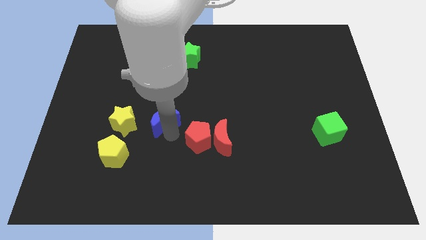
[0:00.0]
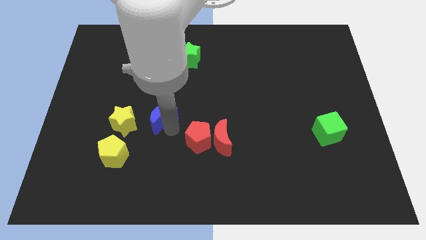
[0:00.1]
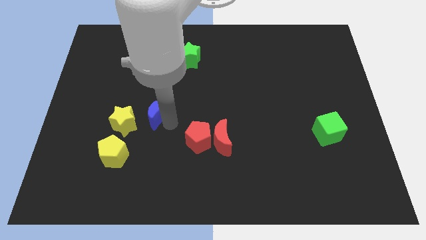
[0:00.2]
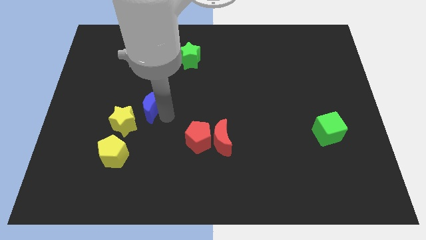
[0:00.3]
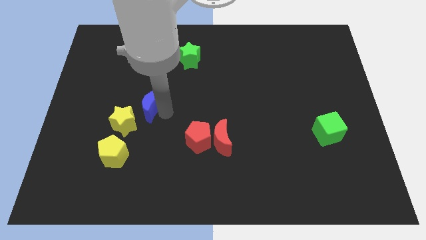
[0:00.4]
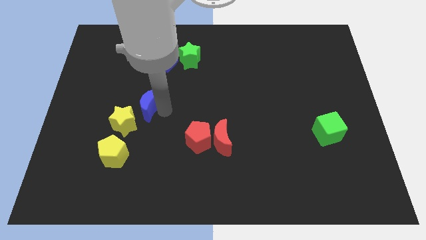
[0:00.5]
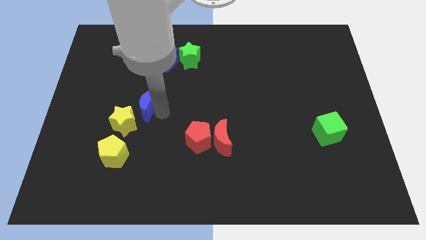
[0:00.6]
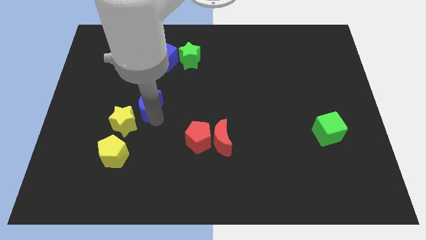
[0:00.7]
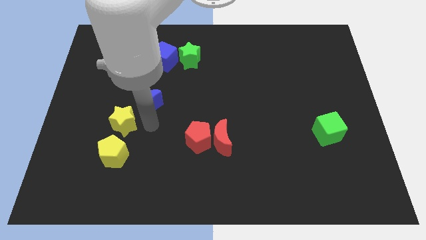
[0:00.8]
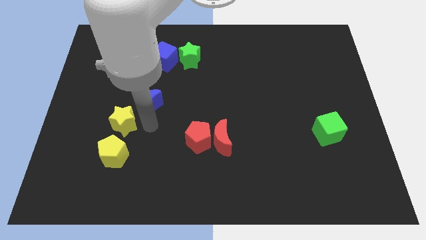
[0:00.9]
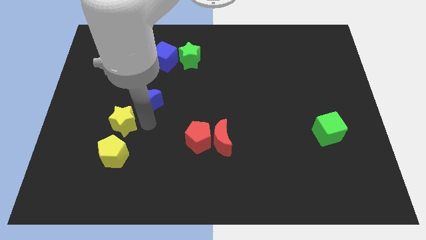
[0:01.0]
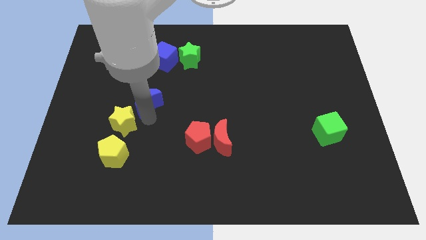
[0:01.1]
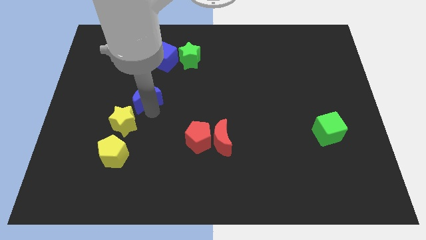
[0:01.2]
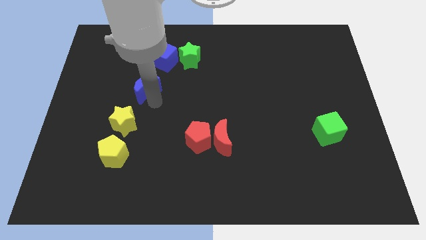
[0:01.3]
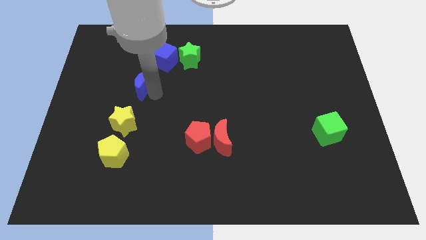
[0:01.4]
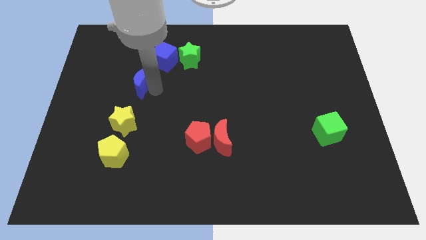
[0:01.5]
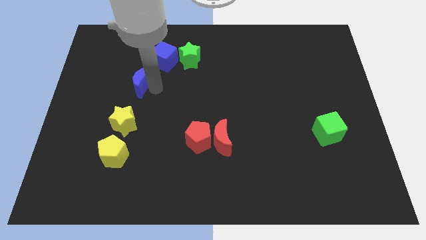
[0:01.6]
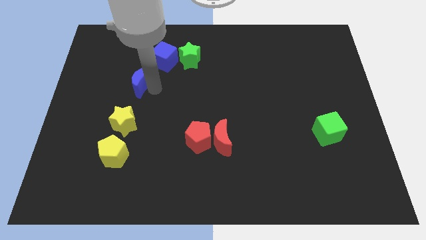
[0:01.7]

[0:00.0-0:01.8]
place the blue moon in between the blue cube and yellow star

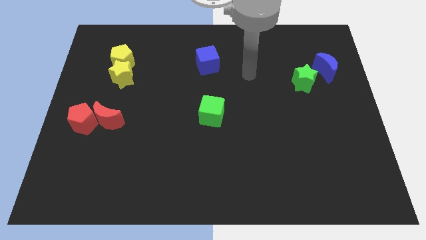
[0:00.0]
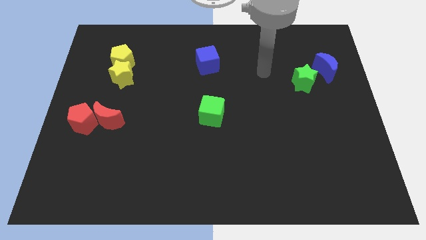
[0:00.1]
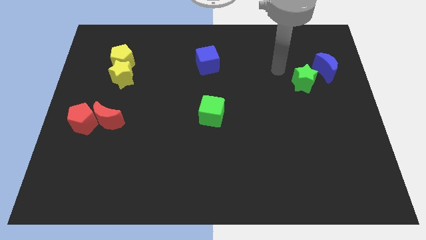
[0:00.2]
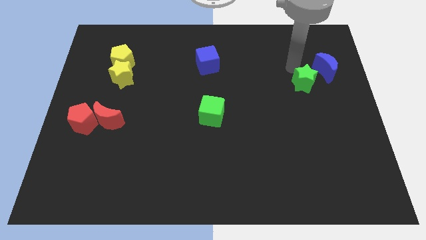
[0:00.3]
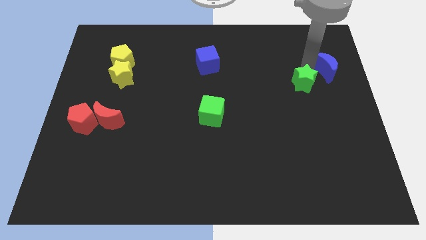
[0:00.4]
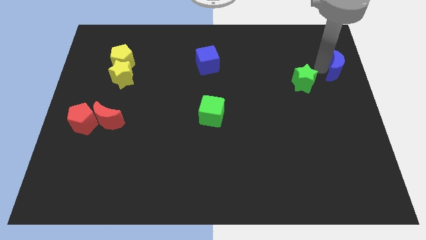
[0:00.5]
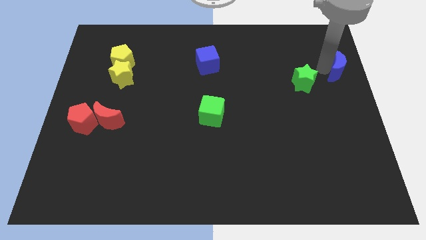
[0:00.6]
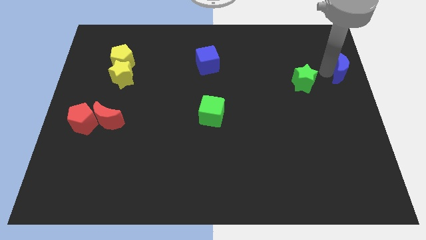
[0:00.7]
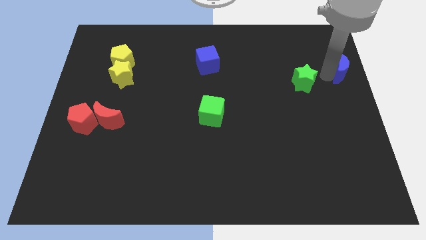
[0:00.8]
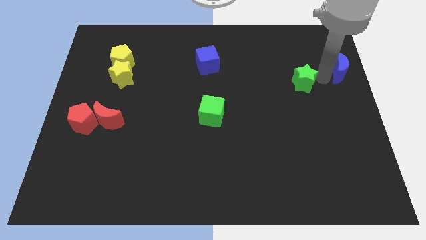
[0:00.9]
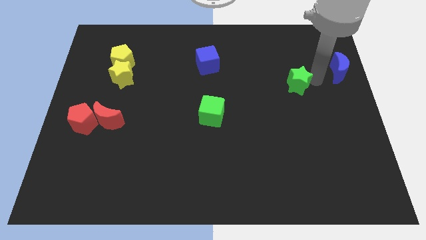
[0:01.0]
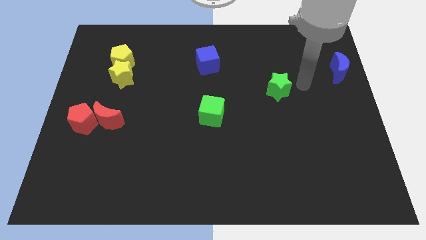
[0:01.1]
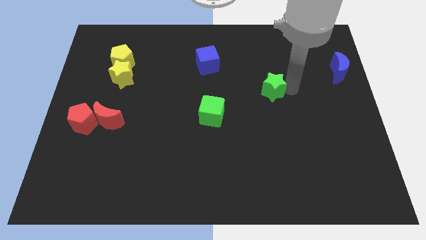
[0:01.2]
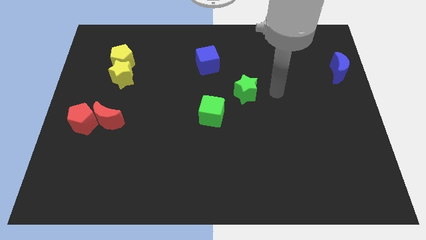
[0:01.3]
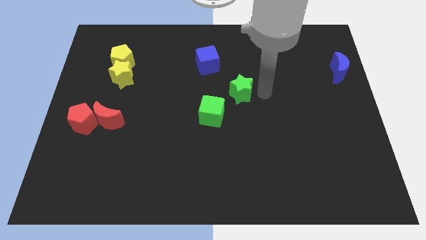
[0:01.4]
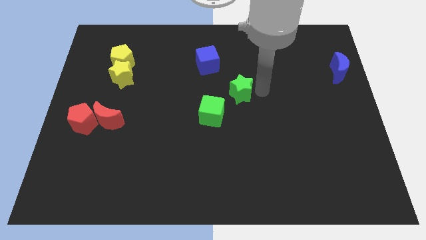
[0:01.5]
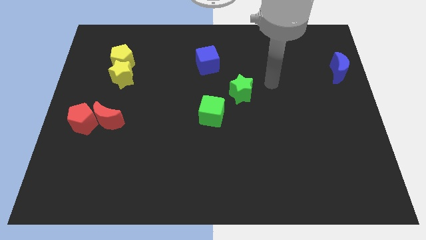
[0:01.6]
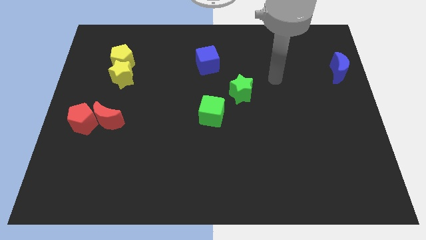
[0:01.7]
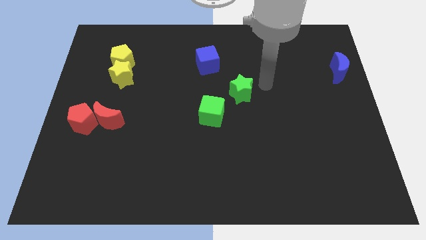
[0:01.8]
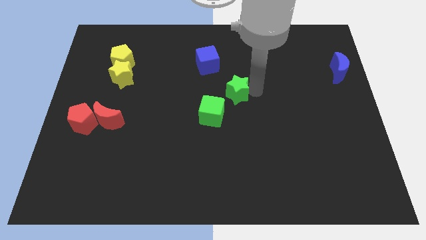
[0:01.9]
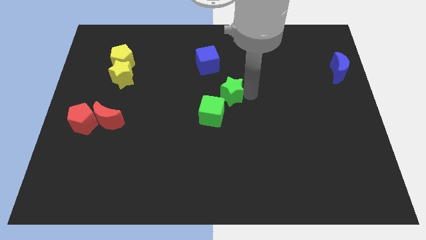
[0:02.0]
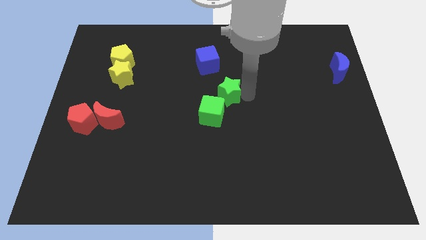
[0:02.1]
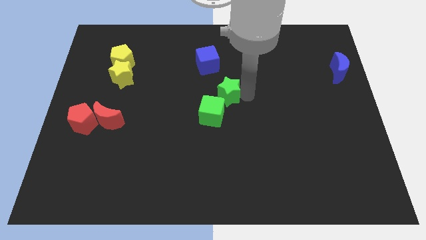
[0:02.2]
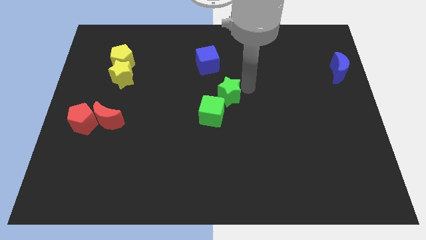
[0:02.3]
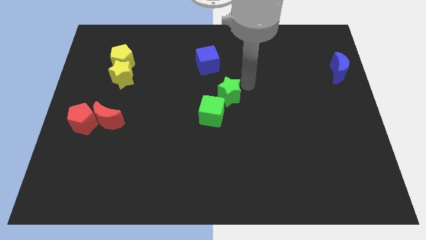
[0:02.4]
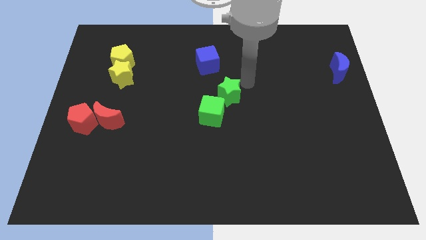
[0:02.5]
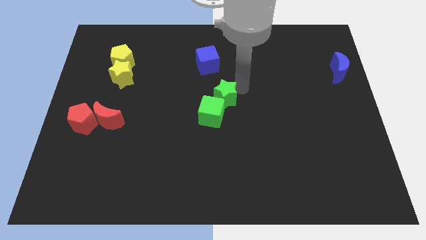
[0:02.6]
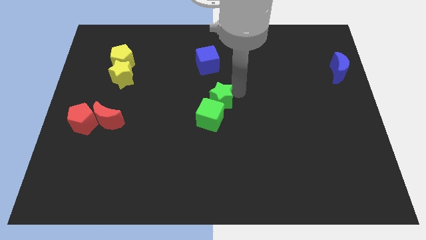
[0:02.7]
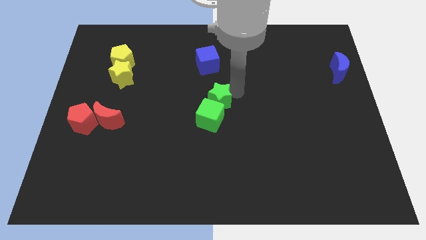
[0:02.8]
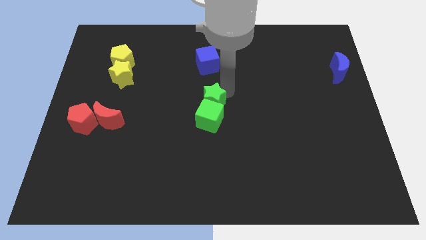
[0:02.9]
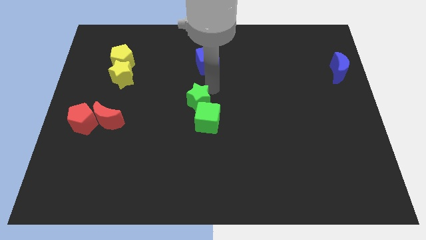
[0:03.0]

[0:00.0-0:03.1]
separate green star from blue moon

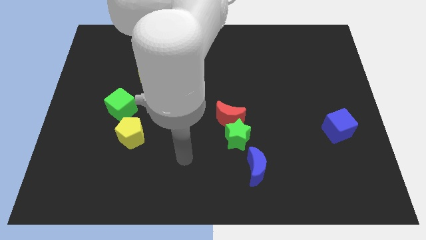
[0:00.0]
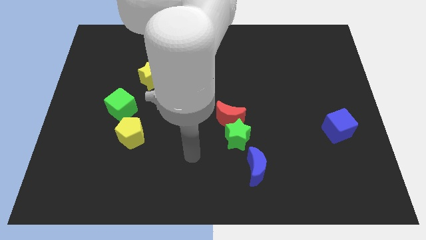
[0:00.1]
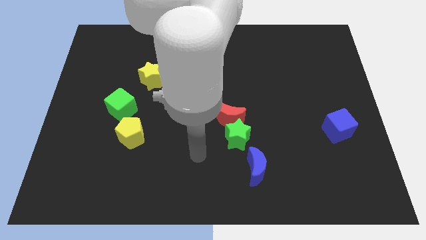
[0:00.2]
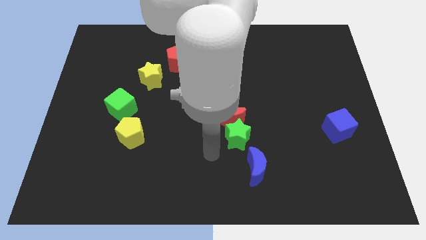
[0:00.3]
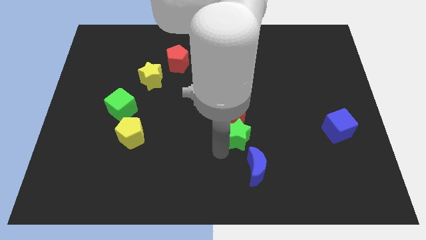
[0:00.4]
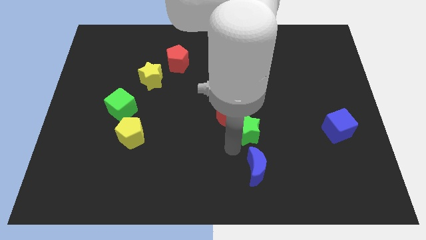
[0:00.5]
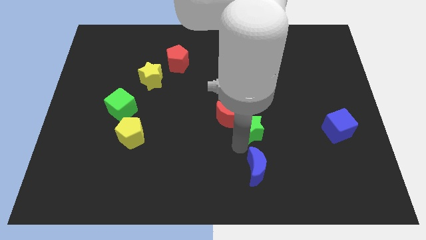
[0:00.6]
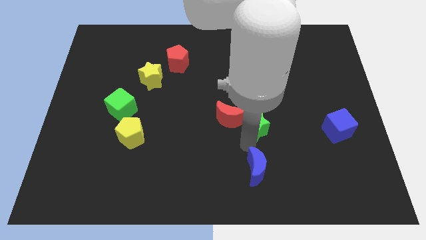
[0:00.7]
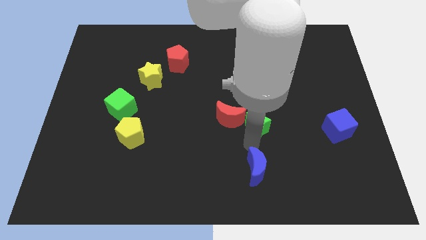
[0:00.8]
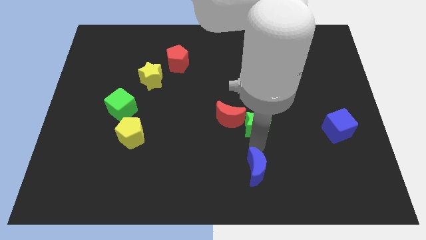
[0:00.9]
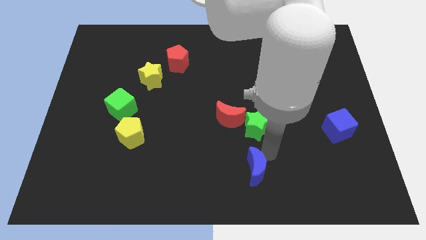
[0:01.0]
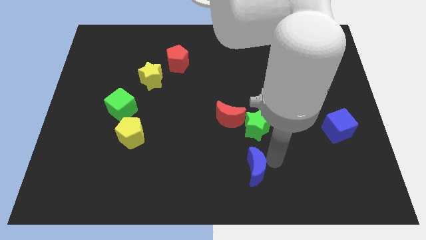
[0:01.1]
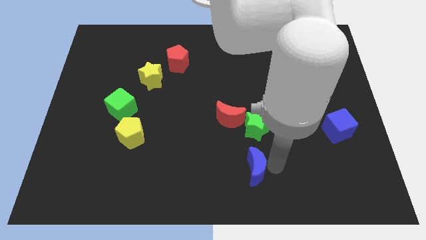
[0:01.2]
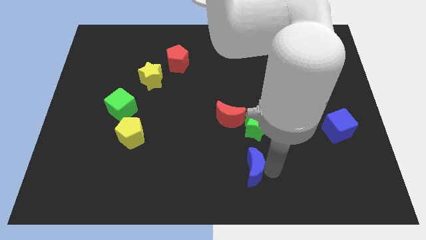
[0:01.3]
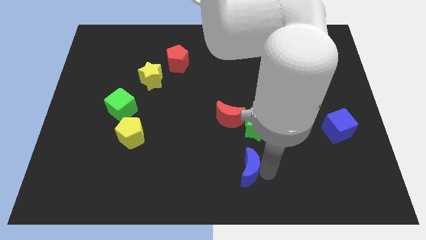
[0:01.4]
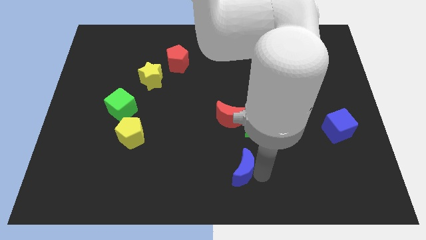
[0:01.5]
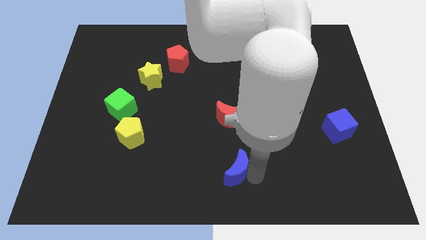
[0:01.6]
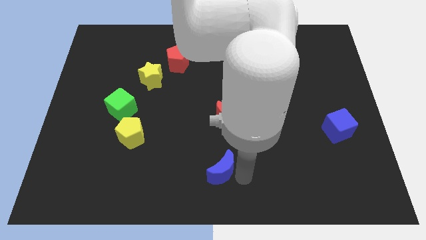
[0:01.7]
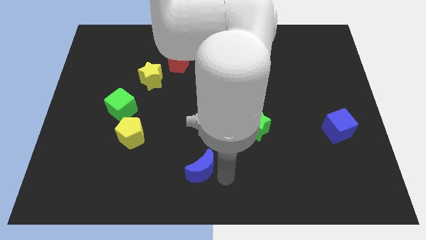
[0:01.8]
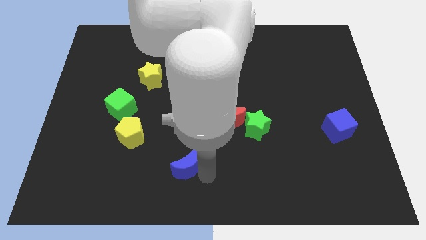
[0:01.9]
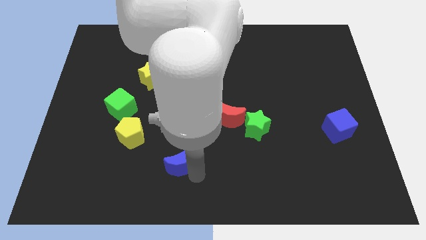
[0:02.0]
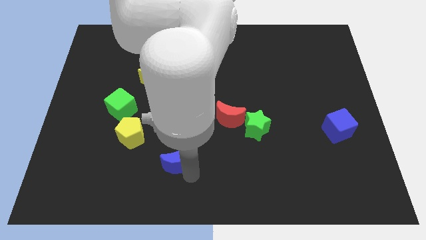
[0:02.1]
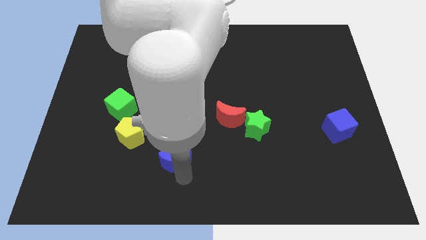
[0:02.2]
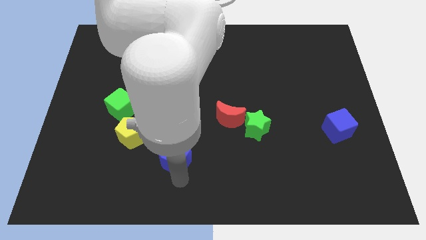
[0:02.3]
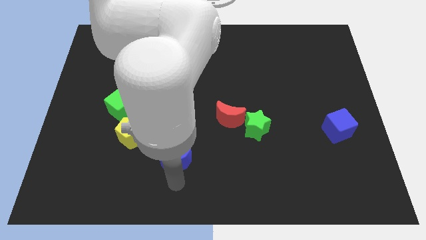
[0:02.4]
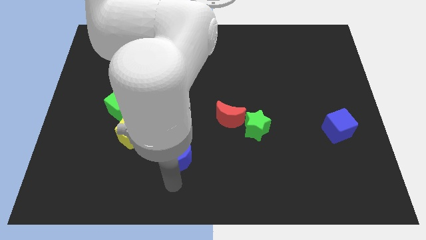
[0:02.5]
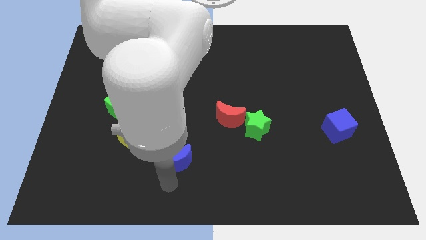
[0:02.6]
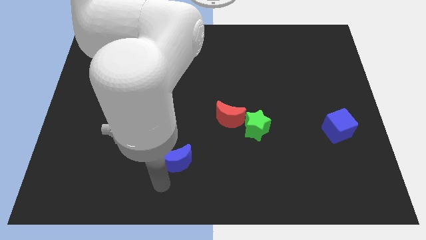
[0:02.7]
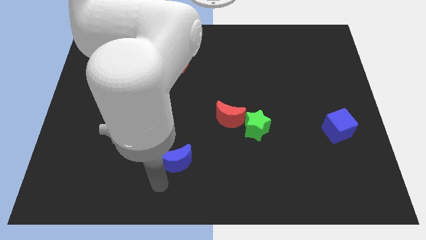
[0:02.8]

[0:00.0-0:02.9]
push blue crescent below red pentagon

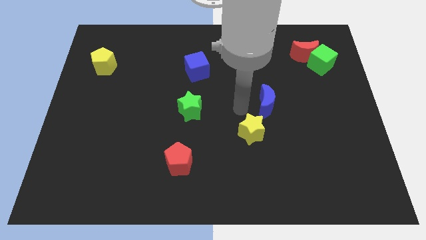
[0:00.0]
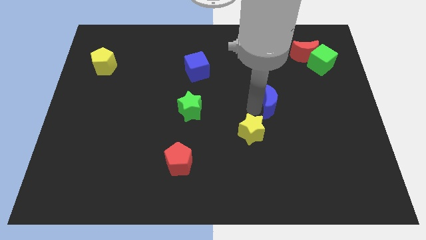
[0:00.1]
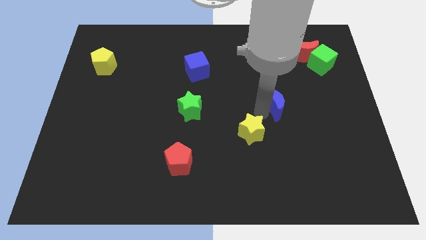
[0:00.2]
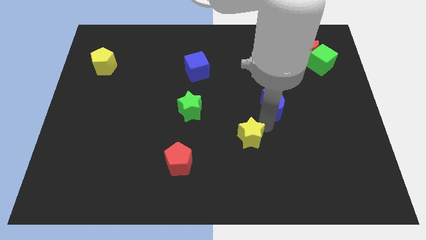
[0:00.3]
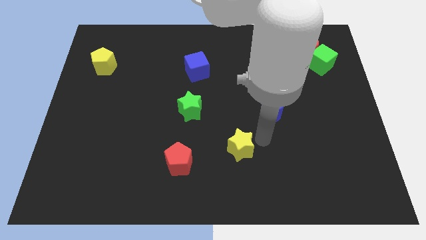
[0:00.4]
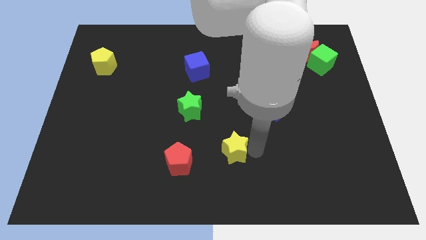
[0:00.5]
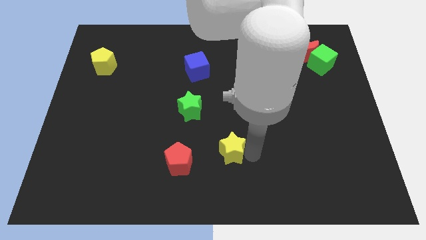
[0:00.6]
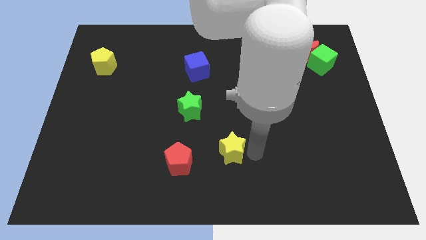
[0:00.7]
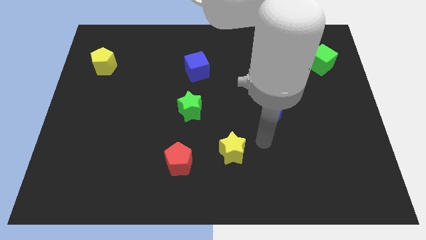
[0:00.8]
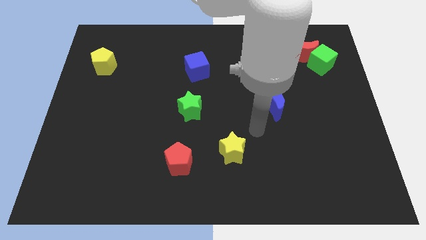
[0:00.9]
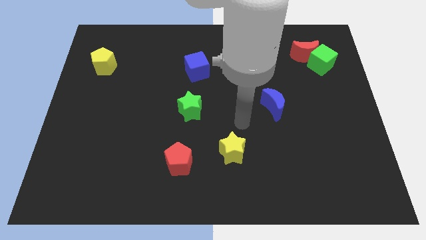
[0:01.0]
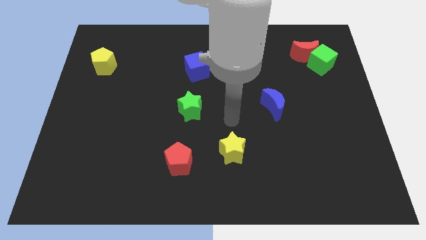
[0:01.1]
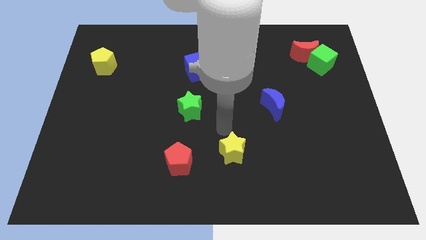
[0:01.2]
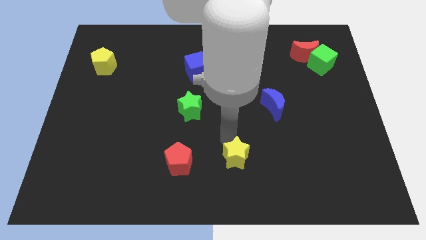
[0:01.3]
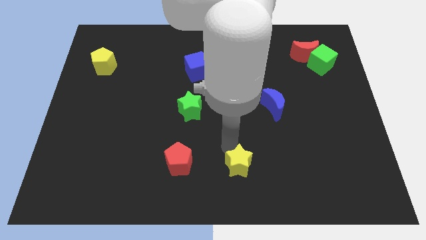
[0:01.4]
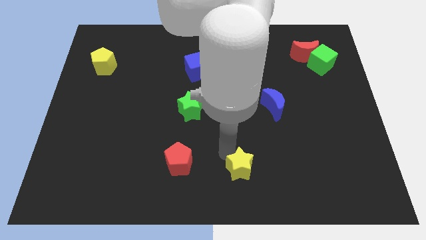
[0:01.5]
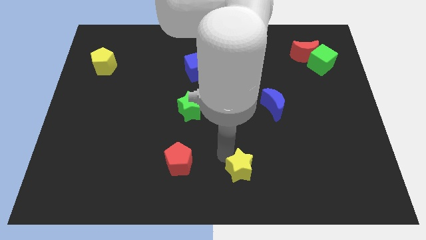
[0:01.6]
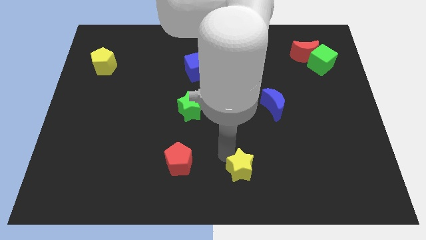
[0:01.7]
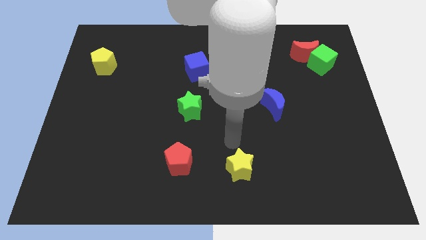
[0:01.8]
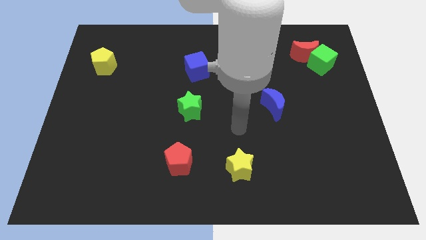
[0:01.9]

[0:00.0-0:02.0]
separate the yellow star from the blue moon
